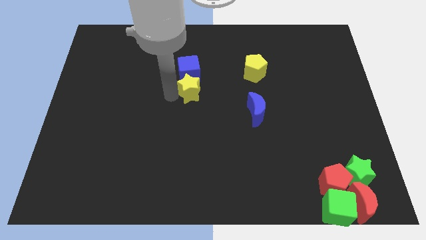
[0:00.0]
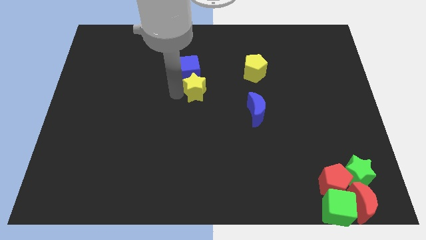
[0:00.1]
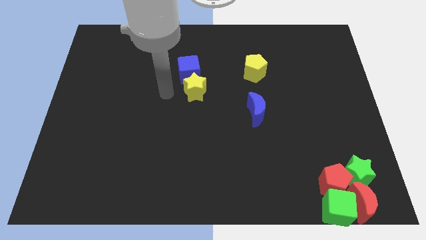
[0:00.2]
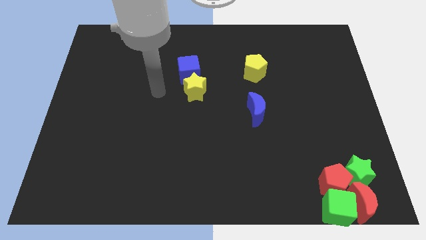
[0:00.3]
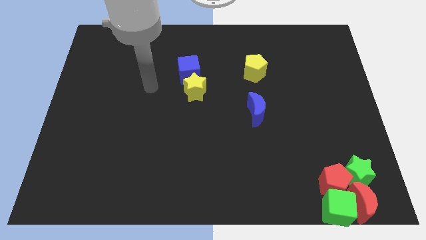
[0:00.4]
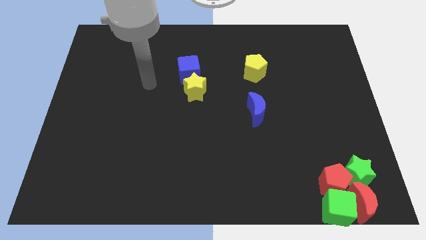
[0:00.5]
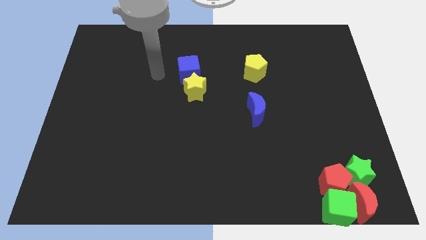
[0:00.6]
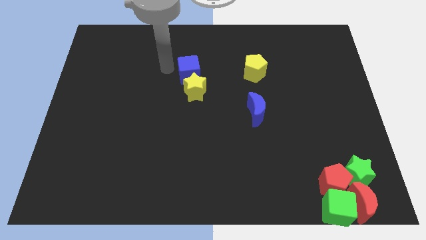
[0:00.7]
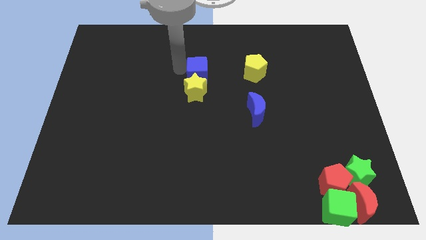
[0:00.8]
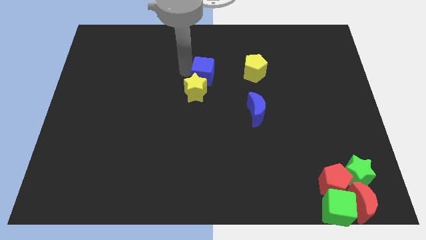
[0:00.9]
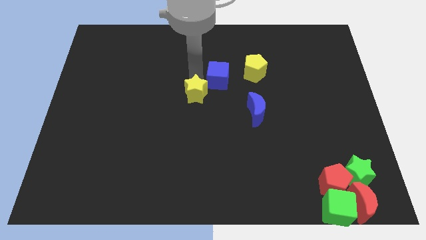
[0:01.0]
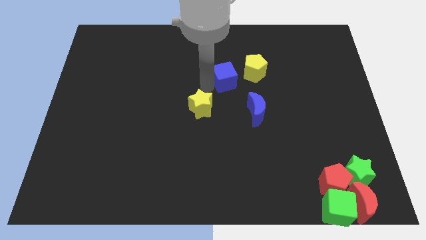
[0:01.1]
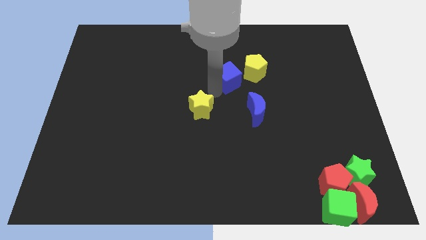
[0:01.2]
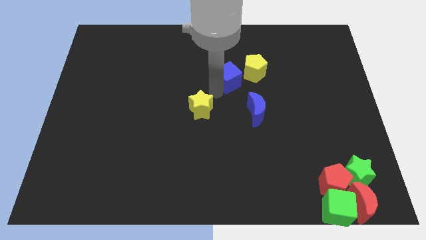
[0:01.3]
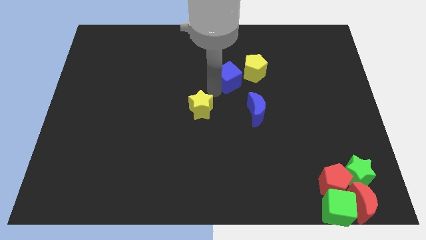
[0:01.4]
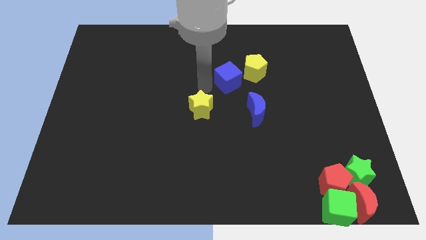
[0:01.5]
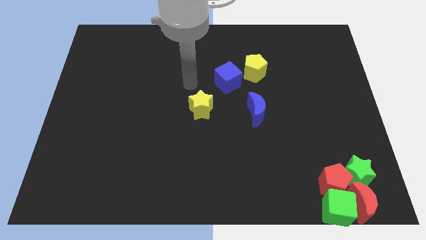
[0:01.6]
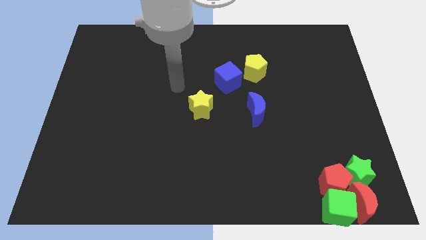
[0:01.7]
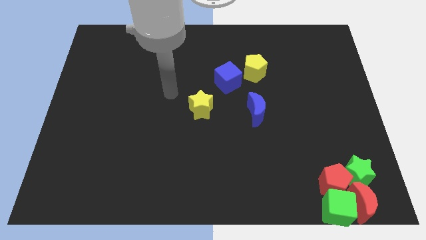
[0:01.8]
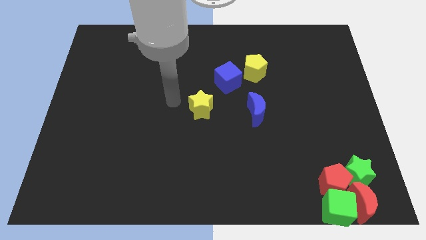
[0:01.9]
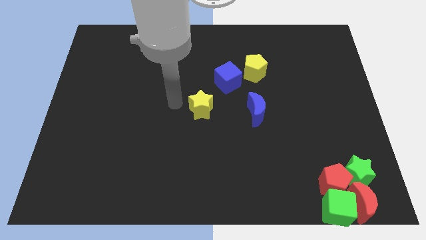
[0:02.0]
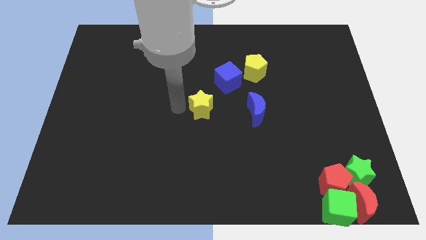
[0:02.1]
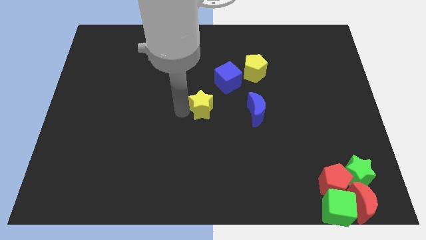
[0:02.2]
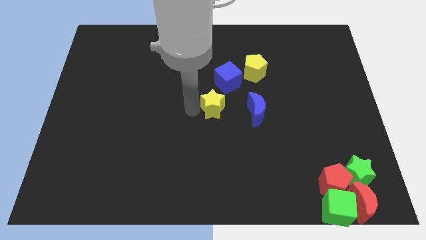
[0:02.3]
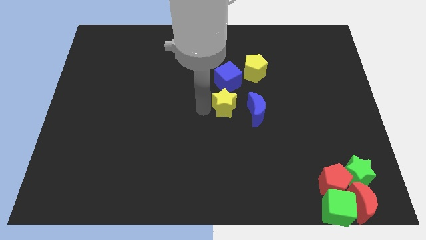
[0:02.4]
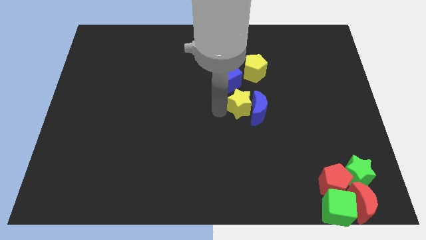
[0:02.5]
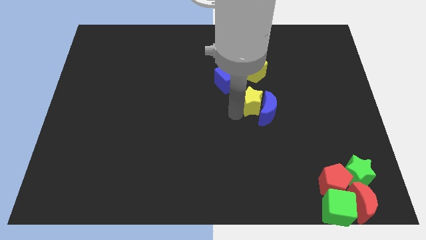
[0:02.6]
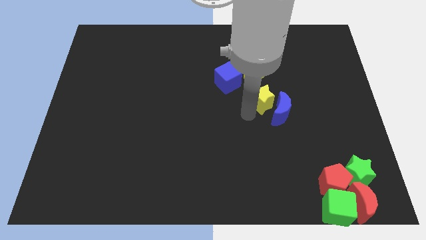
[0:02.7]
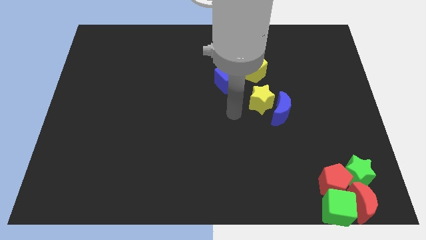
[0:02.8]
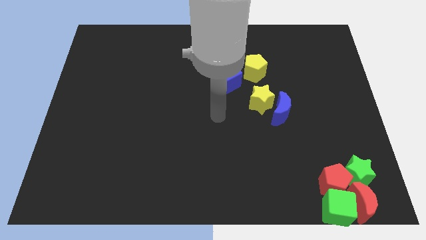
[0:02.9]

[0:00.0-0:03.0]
push the yellow star into the left side of the blue crescent

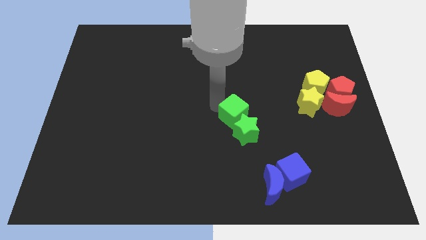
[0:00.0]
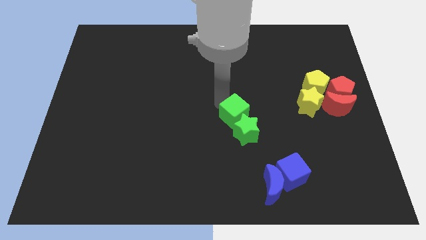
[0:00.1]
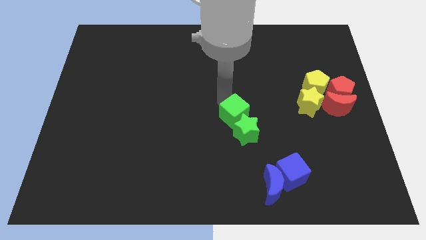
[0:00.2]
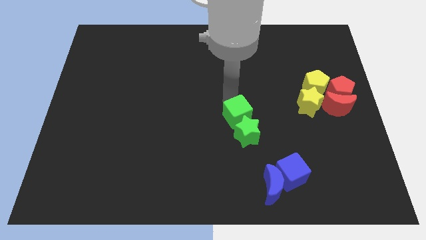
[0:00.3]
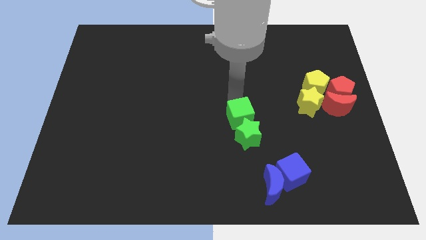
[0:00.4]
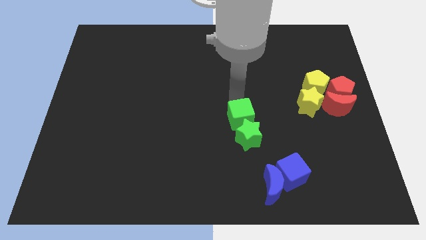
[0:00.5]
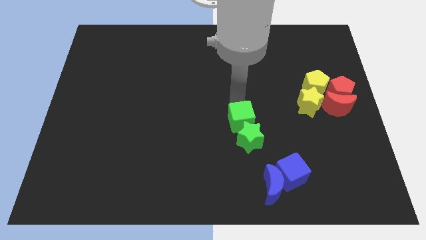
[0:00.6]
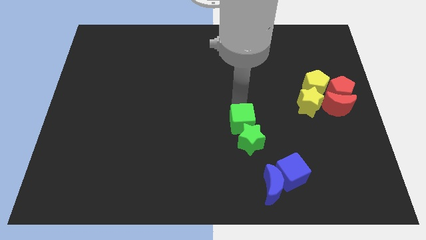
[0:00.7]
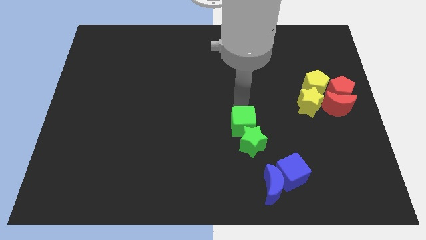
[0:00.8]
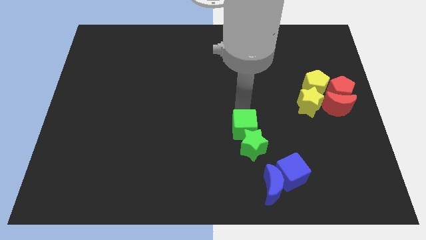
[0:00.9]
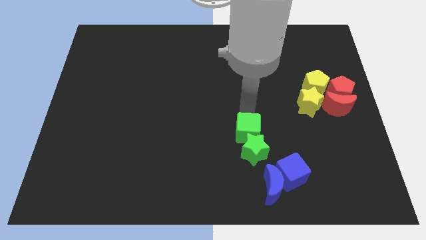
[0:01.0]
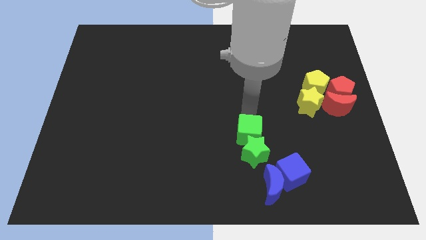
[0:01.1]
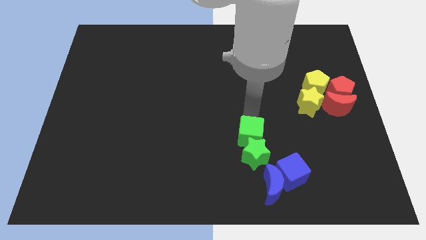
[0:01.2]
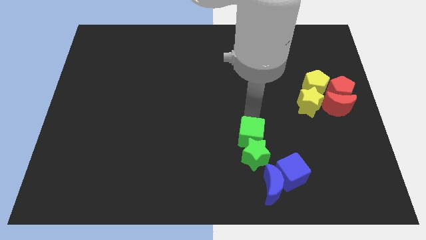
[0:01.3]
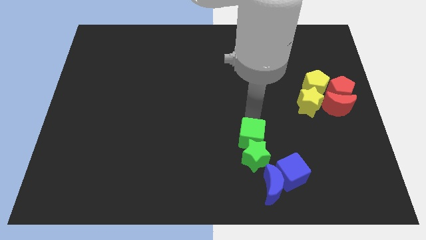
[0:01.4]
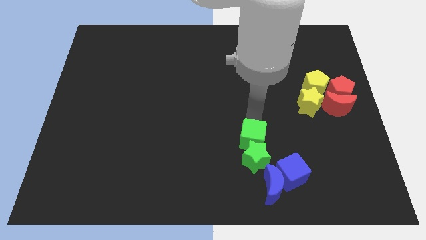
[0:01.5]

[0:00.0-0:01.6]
push green cube and green star towards blue half moon and blue cube

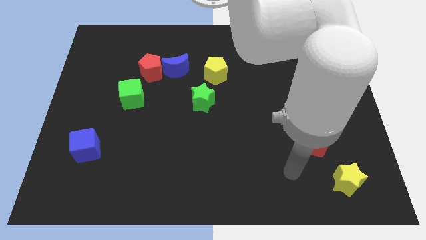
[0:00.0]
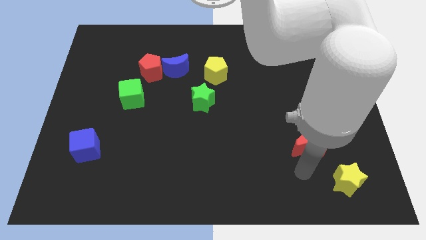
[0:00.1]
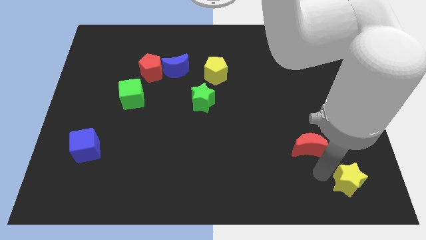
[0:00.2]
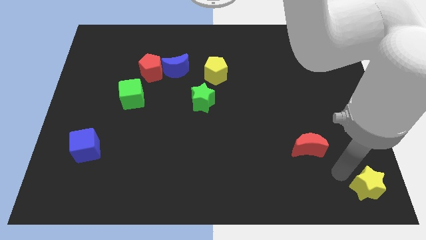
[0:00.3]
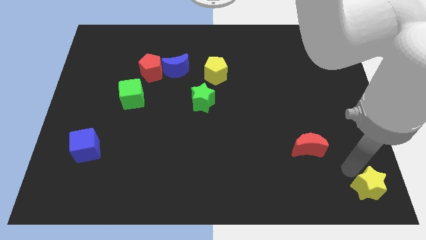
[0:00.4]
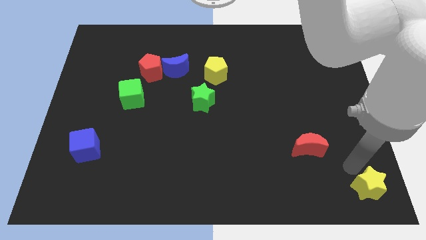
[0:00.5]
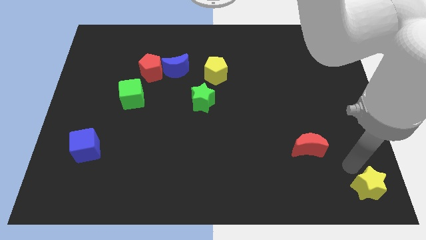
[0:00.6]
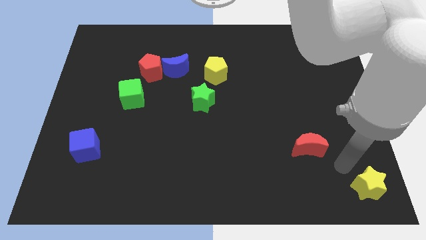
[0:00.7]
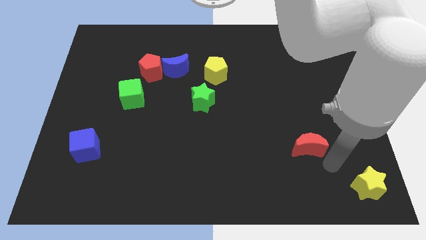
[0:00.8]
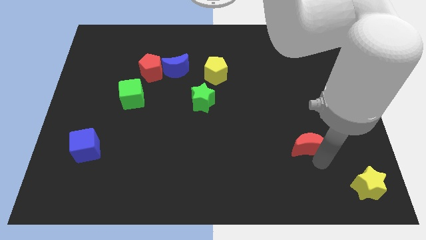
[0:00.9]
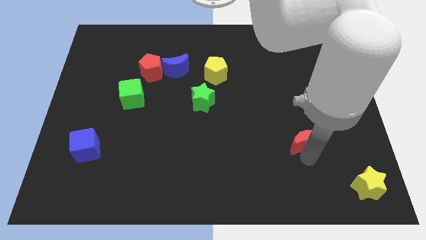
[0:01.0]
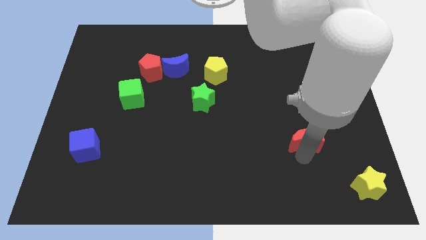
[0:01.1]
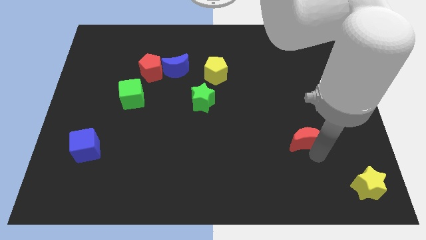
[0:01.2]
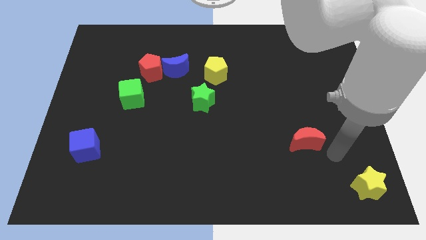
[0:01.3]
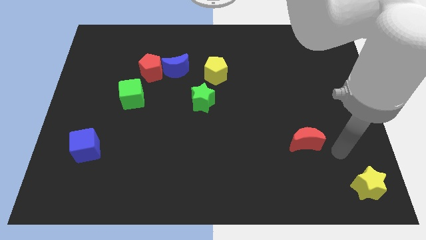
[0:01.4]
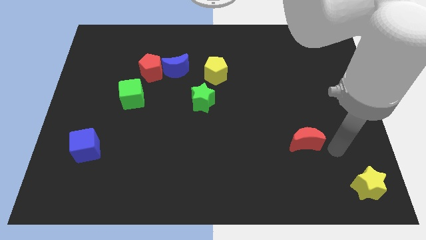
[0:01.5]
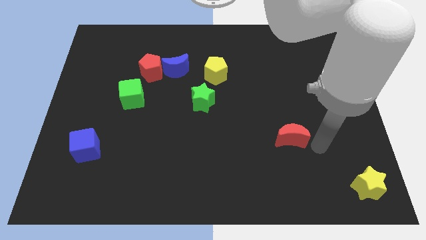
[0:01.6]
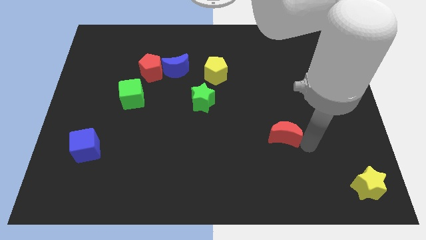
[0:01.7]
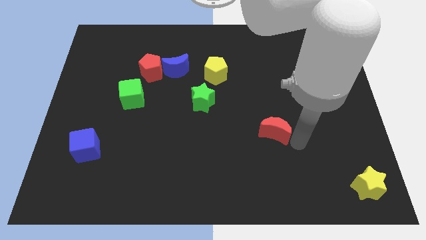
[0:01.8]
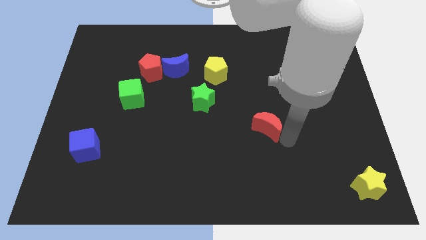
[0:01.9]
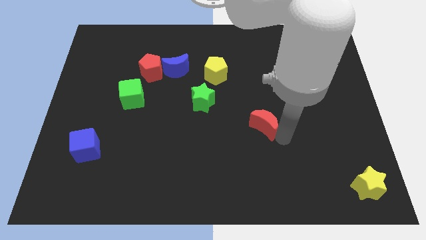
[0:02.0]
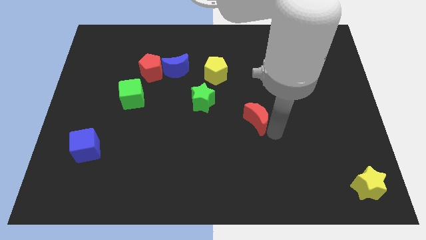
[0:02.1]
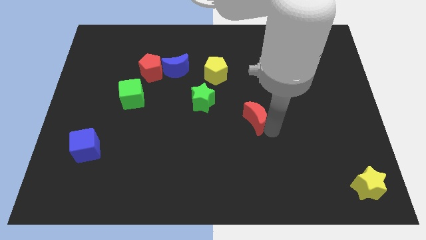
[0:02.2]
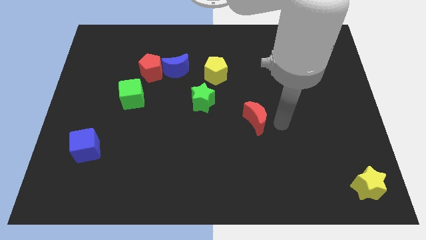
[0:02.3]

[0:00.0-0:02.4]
place red crescent diagonally towards yellow pentagon

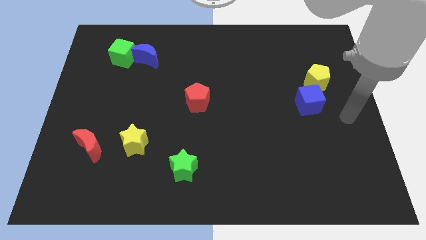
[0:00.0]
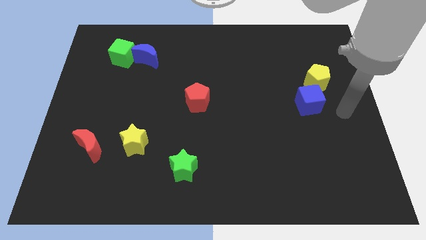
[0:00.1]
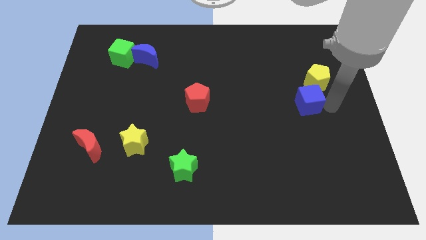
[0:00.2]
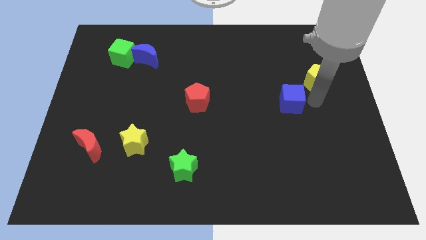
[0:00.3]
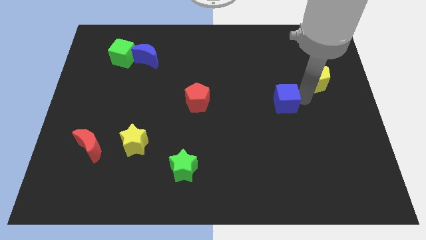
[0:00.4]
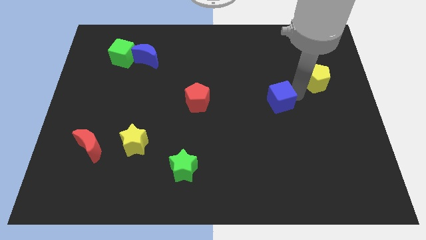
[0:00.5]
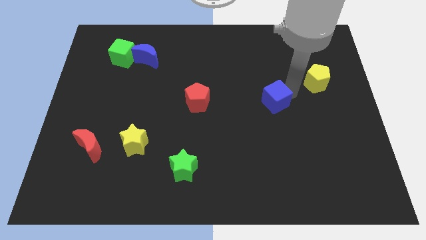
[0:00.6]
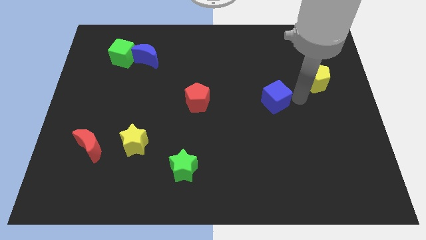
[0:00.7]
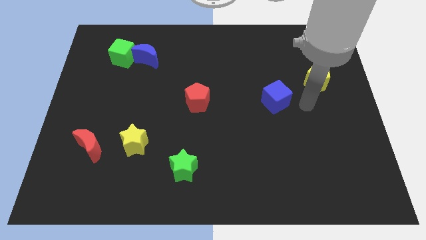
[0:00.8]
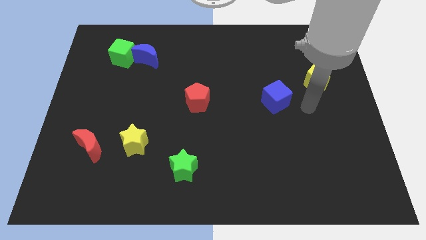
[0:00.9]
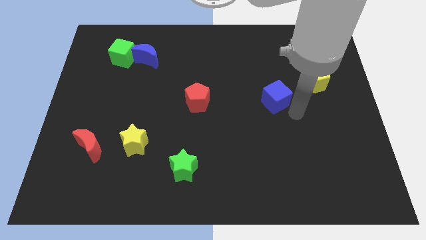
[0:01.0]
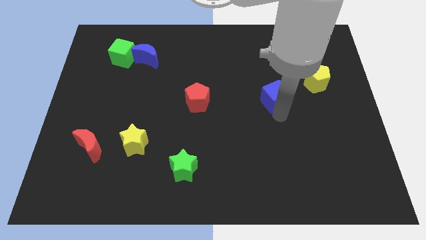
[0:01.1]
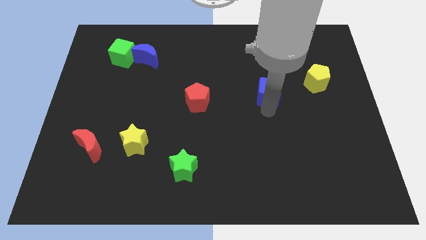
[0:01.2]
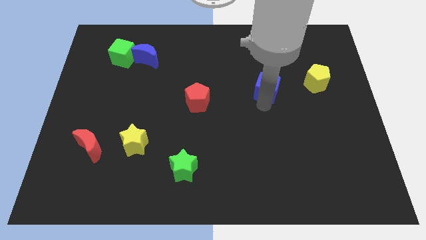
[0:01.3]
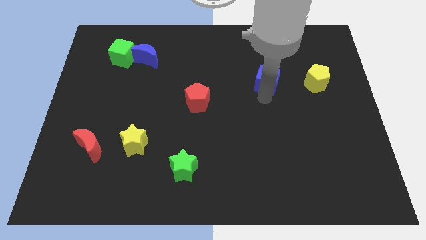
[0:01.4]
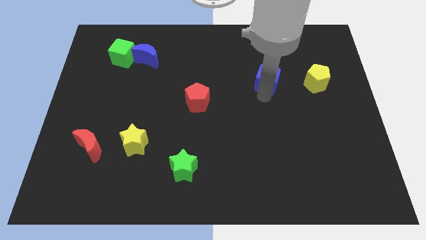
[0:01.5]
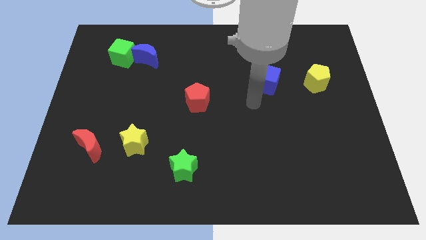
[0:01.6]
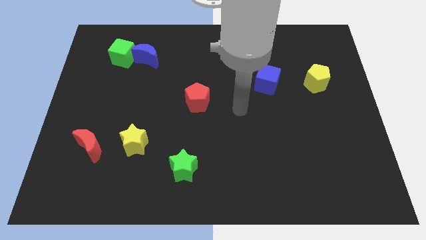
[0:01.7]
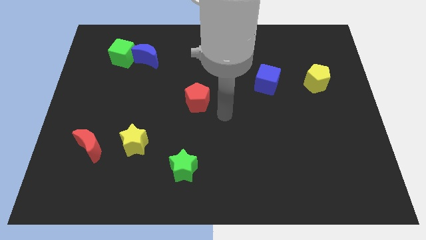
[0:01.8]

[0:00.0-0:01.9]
place the blue cube to the right side of the yellow pentagon
